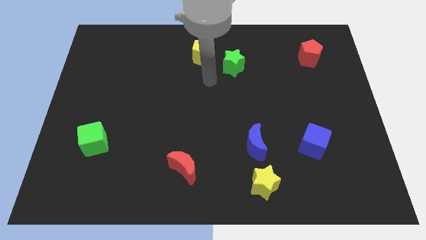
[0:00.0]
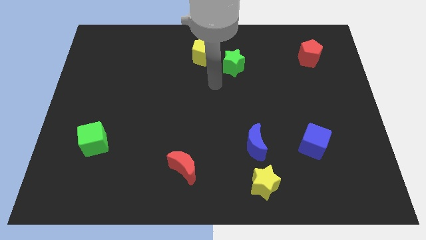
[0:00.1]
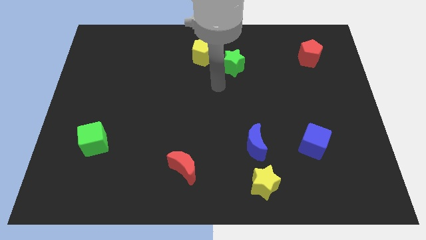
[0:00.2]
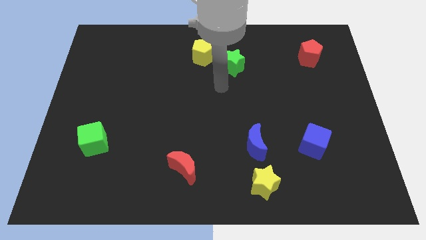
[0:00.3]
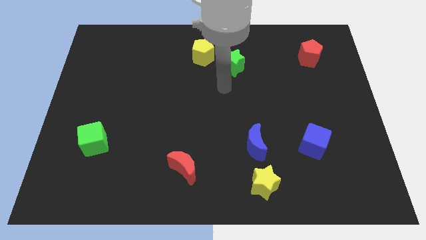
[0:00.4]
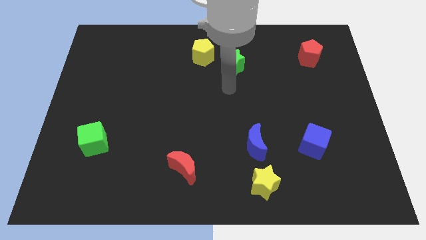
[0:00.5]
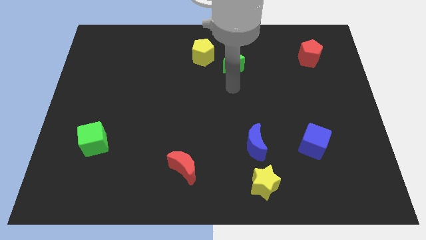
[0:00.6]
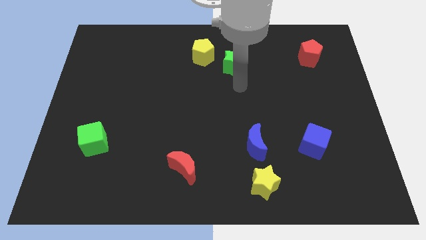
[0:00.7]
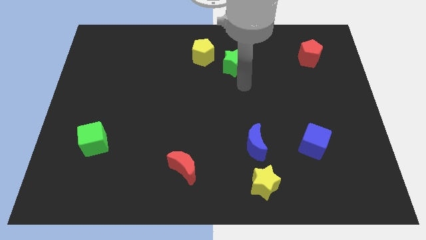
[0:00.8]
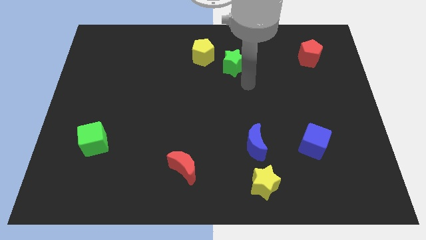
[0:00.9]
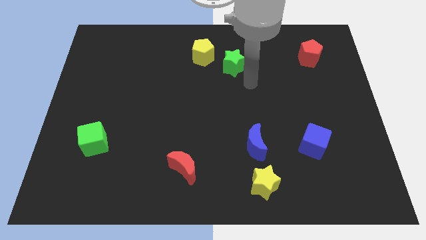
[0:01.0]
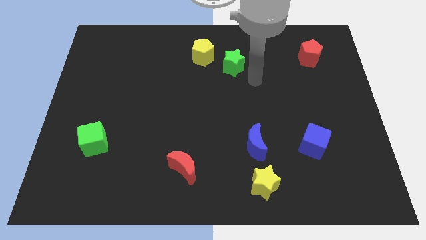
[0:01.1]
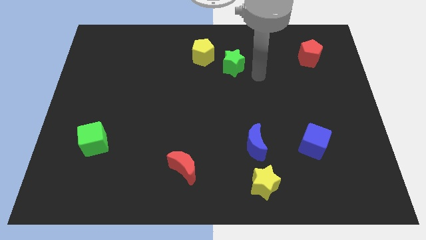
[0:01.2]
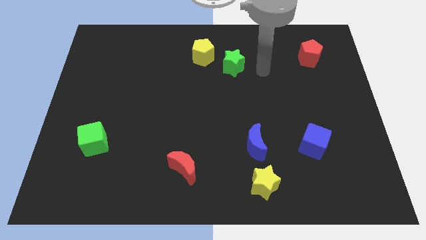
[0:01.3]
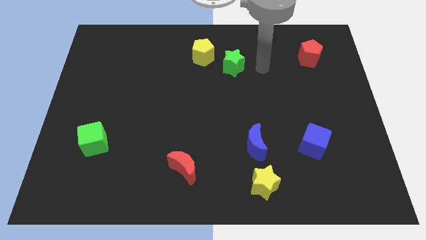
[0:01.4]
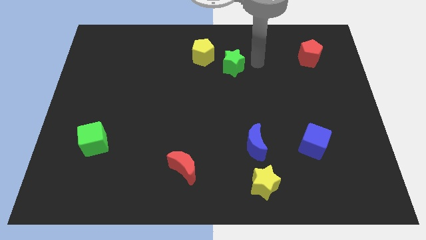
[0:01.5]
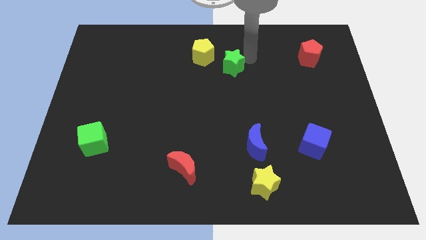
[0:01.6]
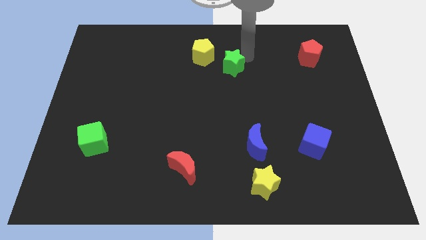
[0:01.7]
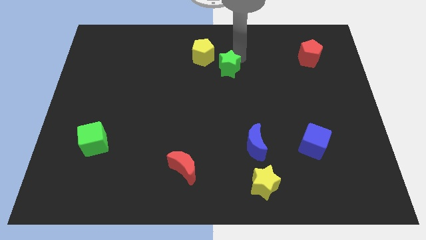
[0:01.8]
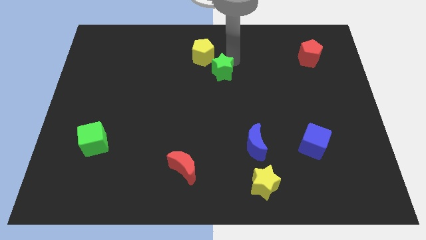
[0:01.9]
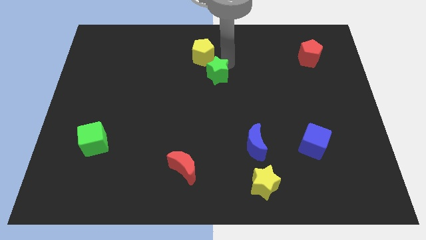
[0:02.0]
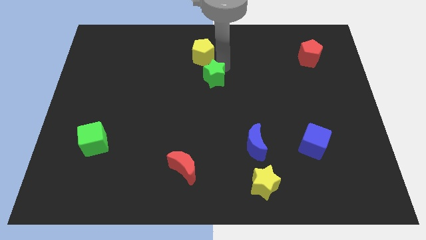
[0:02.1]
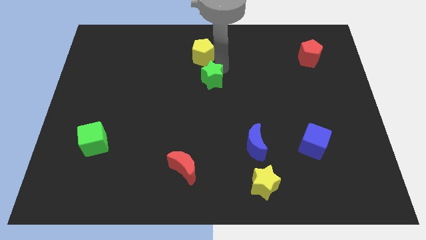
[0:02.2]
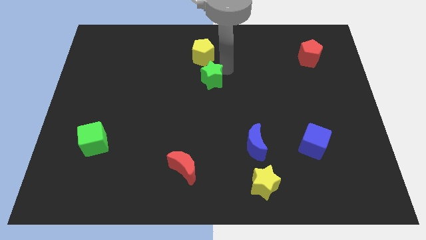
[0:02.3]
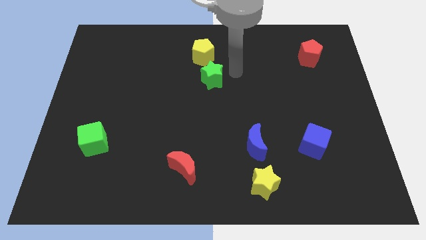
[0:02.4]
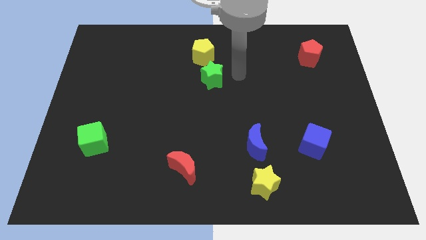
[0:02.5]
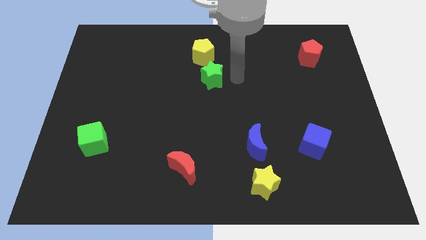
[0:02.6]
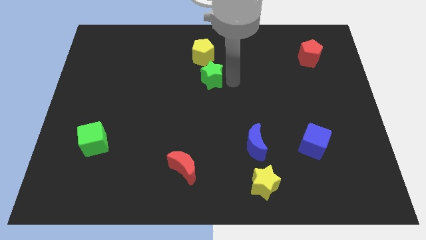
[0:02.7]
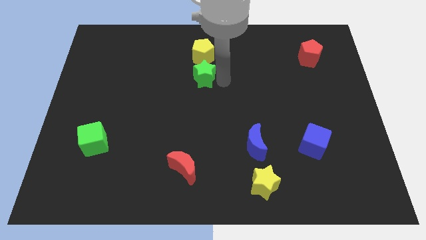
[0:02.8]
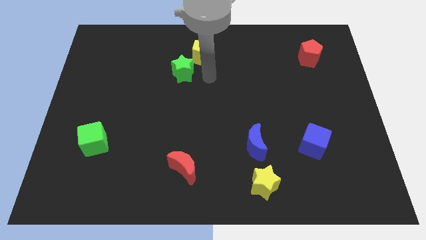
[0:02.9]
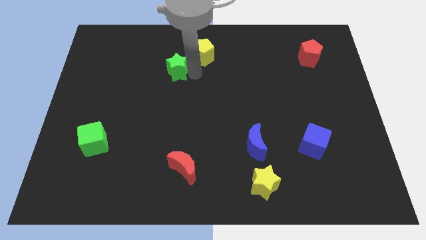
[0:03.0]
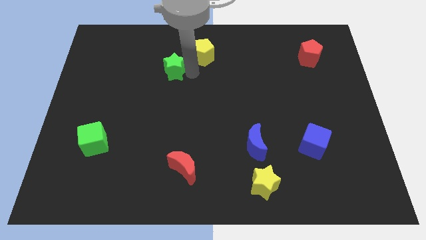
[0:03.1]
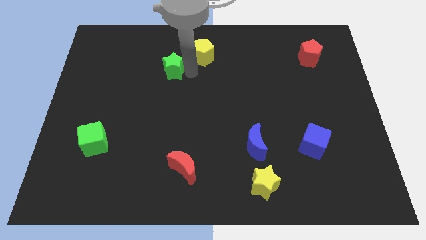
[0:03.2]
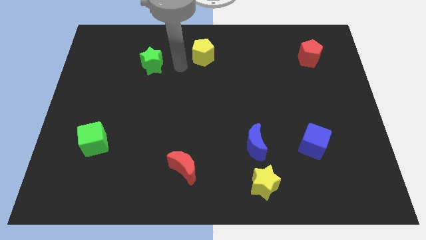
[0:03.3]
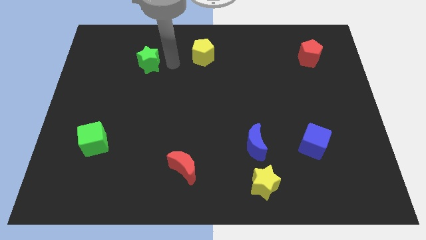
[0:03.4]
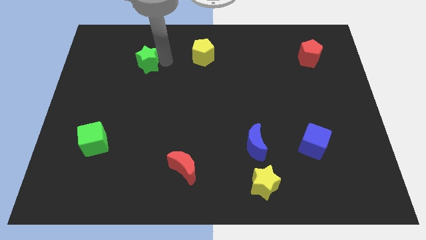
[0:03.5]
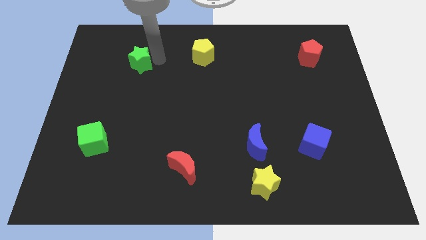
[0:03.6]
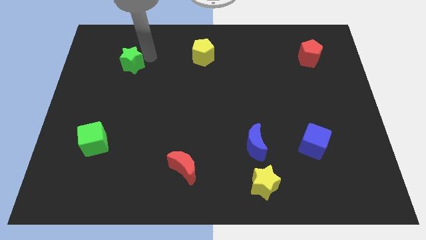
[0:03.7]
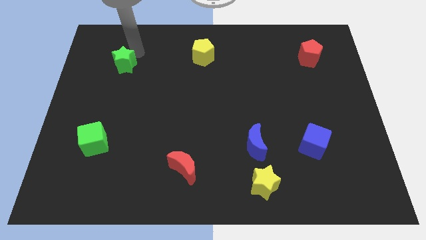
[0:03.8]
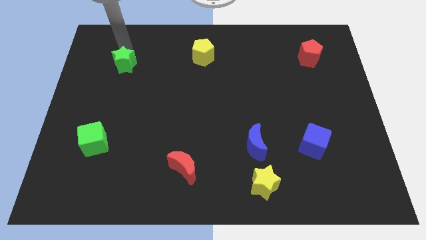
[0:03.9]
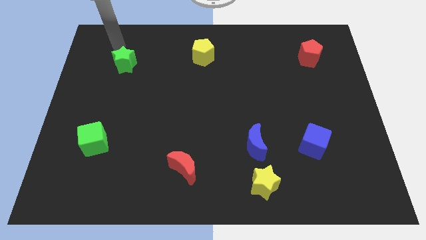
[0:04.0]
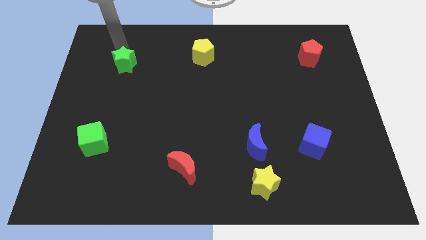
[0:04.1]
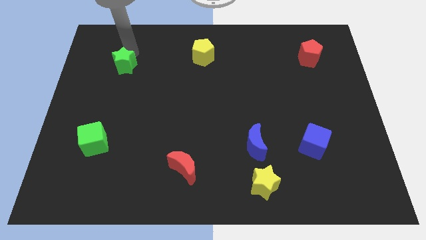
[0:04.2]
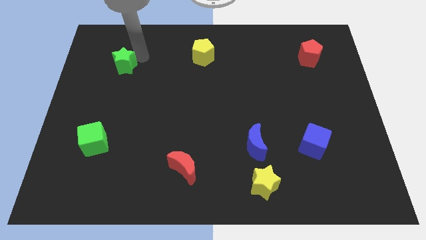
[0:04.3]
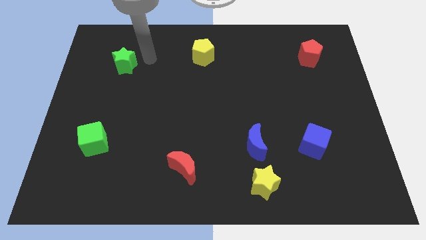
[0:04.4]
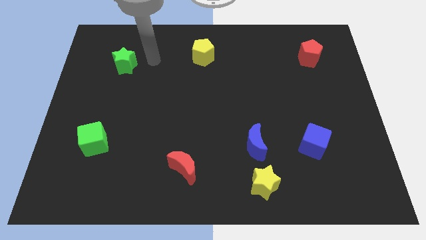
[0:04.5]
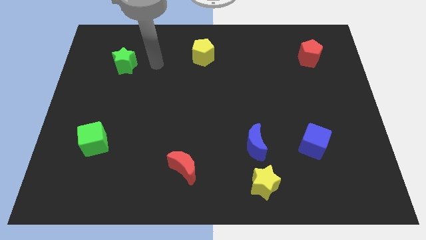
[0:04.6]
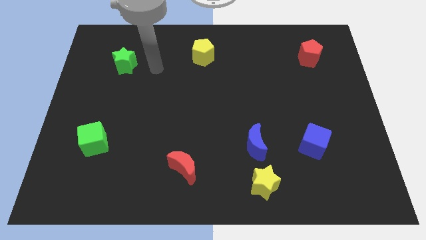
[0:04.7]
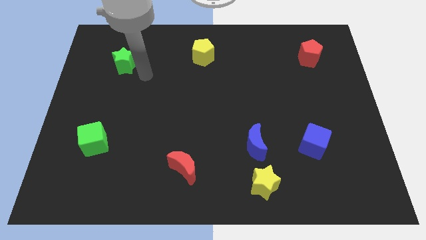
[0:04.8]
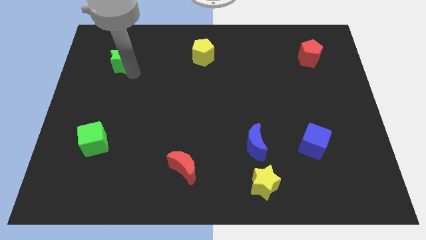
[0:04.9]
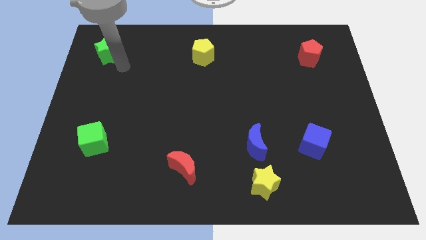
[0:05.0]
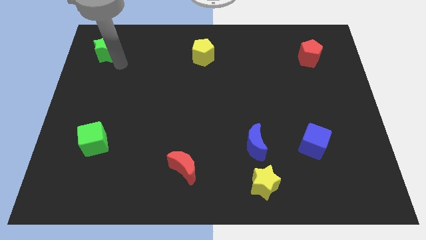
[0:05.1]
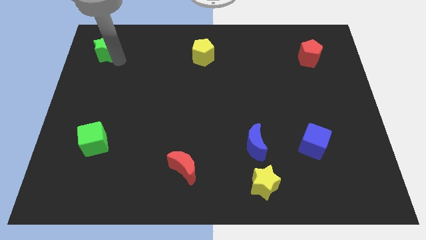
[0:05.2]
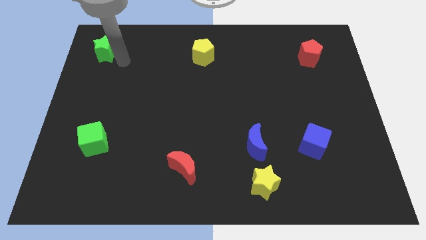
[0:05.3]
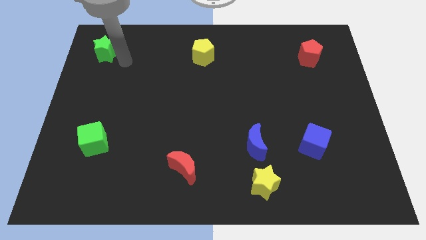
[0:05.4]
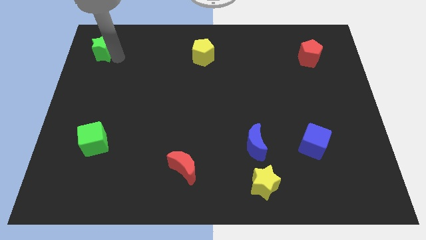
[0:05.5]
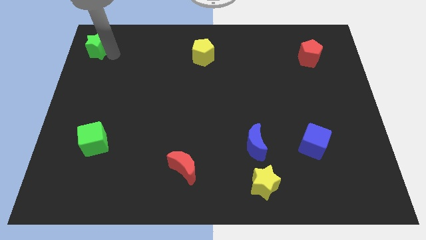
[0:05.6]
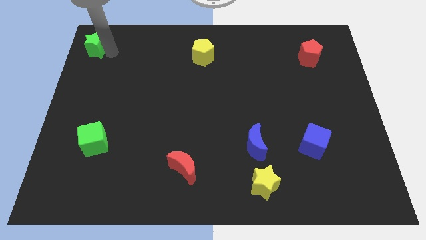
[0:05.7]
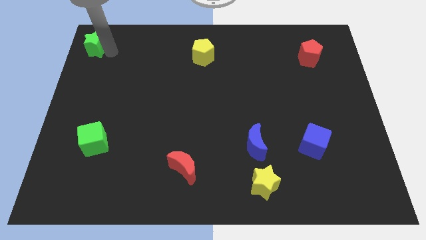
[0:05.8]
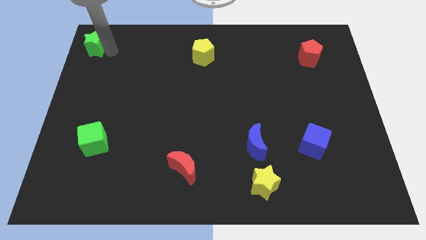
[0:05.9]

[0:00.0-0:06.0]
push the green star to the top left corner of the board

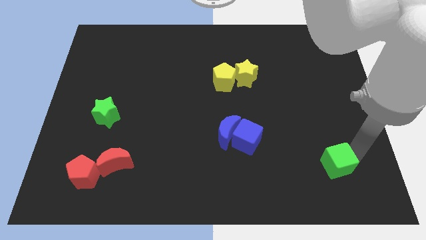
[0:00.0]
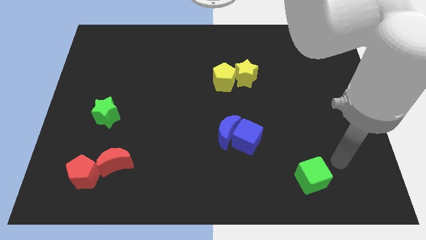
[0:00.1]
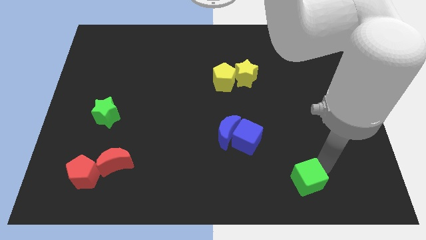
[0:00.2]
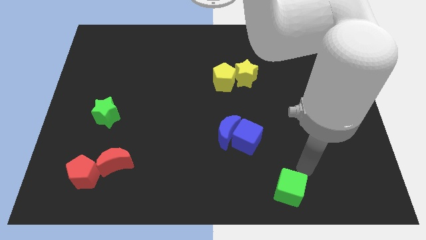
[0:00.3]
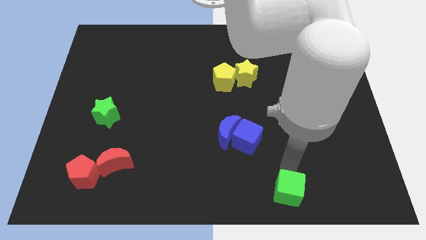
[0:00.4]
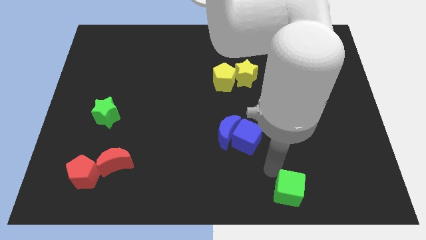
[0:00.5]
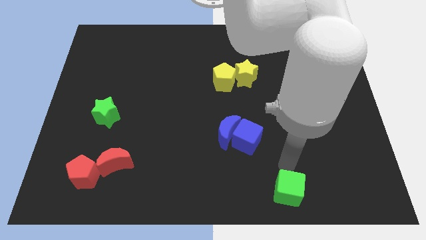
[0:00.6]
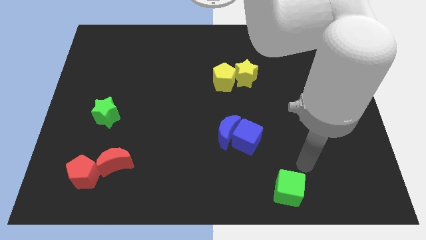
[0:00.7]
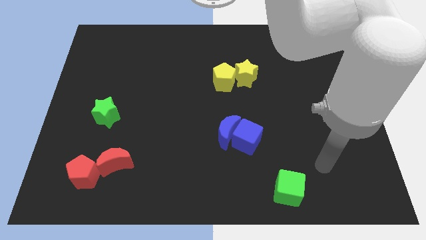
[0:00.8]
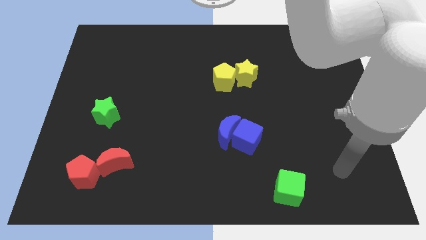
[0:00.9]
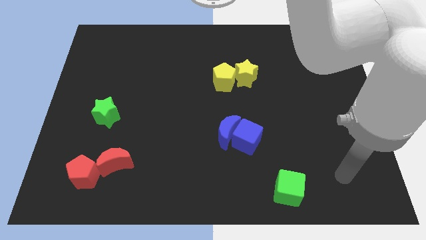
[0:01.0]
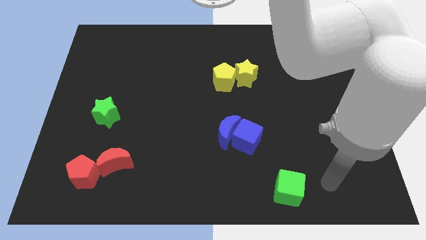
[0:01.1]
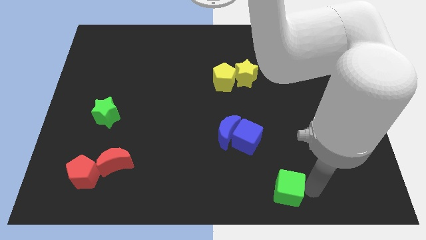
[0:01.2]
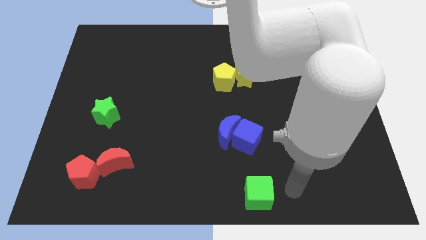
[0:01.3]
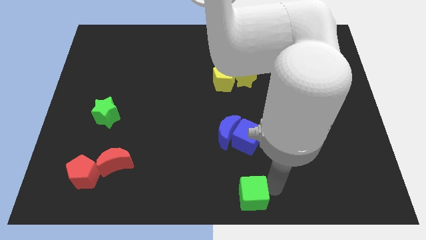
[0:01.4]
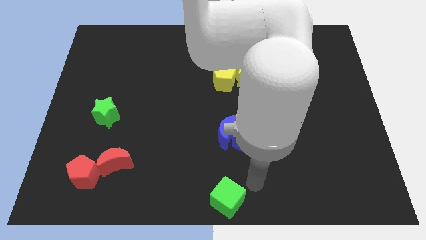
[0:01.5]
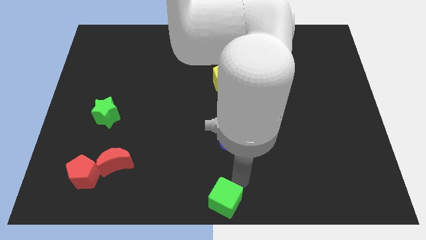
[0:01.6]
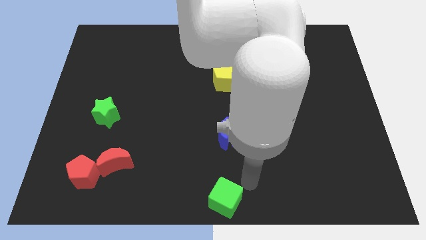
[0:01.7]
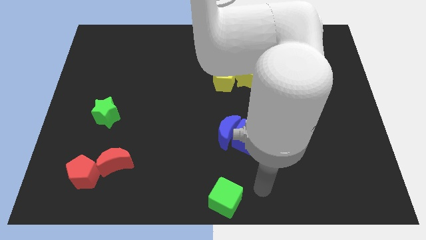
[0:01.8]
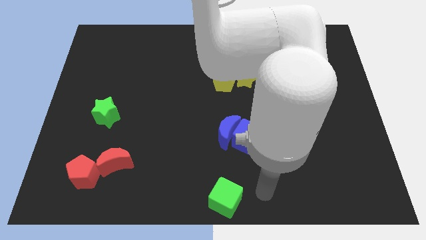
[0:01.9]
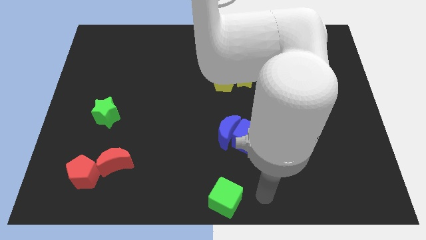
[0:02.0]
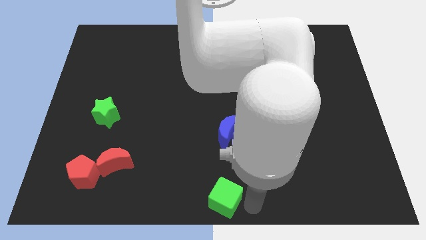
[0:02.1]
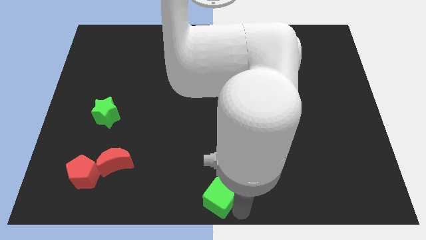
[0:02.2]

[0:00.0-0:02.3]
move the green cube below blue blocks

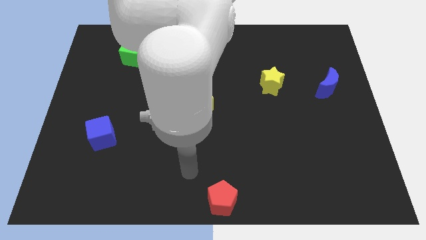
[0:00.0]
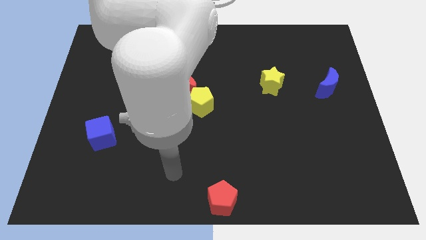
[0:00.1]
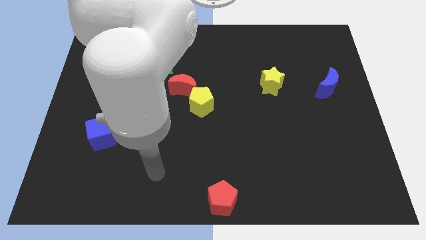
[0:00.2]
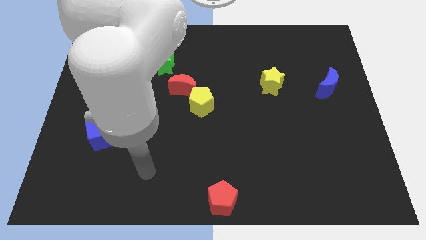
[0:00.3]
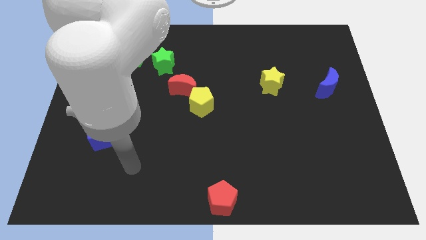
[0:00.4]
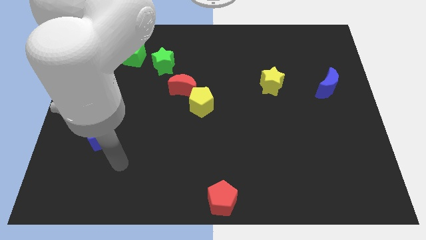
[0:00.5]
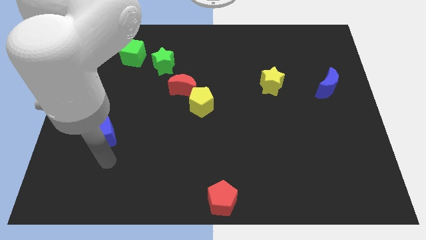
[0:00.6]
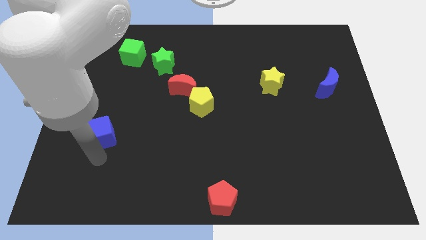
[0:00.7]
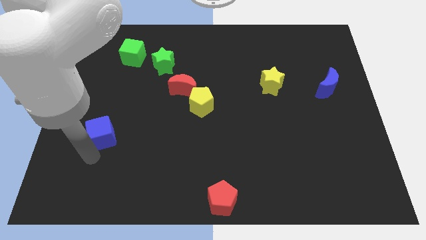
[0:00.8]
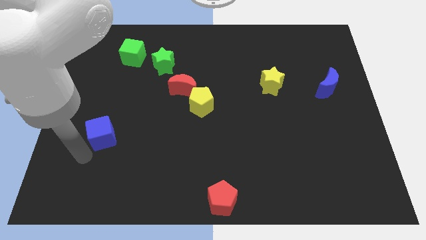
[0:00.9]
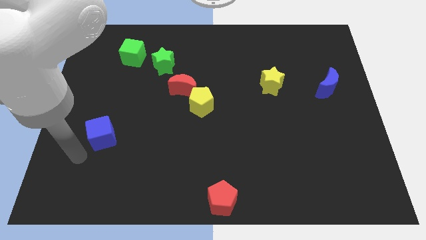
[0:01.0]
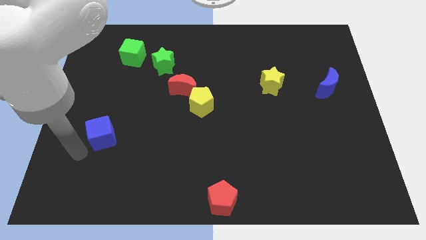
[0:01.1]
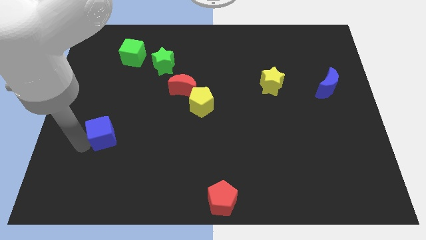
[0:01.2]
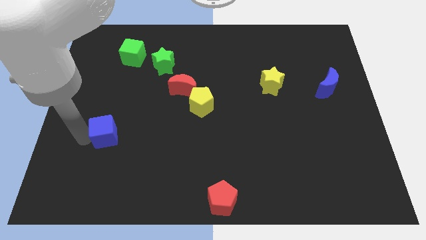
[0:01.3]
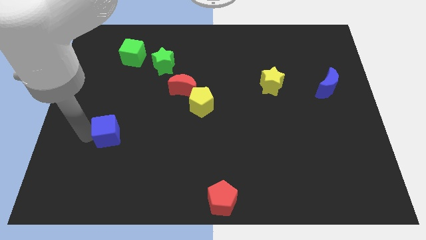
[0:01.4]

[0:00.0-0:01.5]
move the arm to the left side of the blue cube
